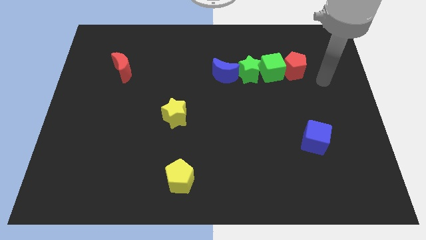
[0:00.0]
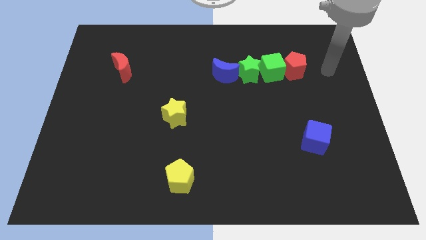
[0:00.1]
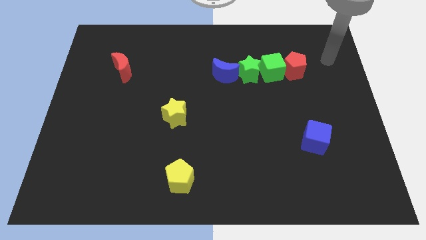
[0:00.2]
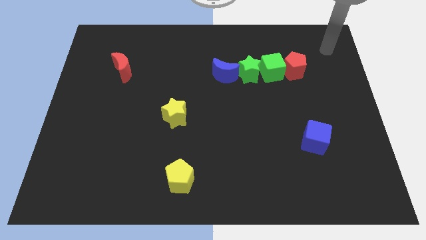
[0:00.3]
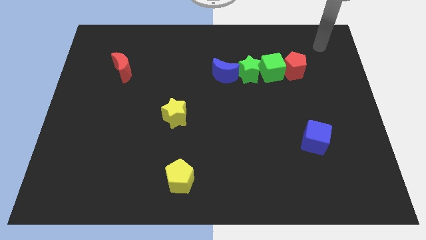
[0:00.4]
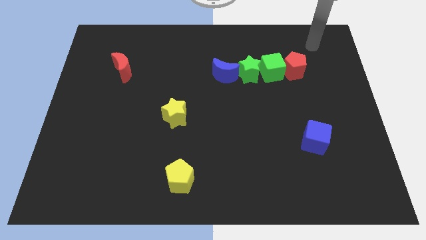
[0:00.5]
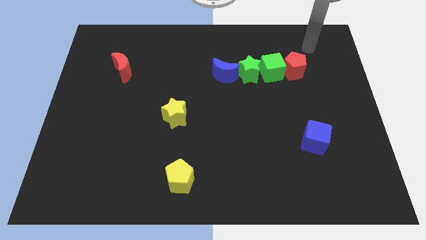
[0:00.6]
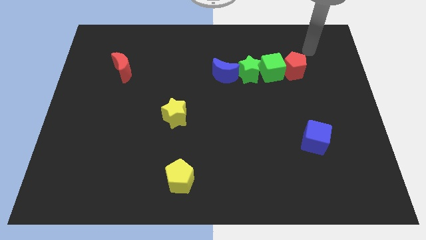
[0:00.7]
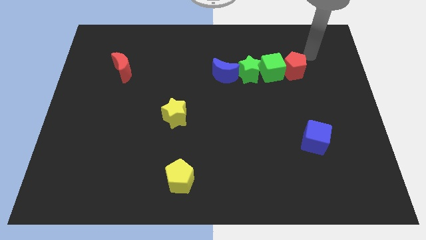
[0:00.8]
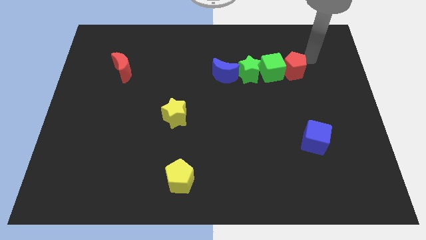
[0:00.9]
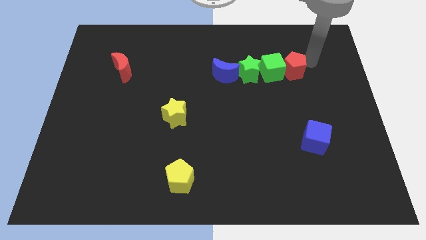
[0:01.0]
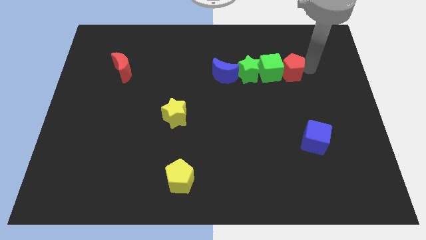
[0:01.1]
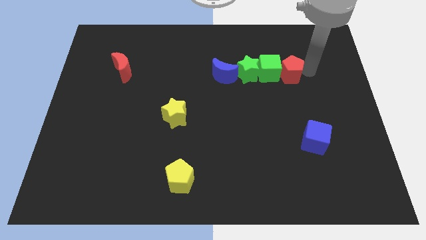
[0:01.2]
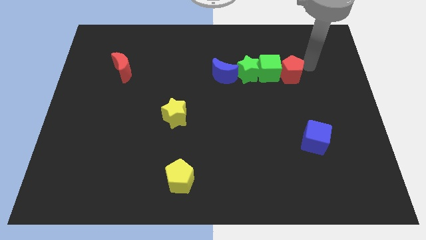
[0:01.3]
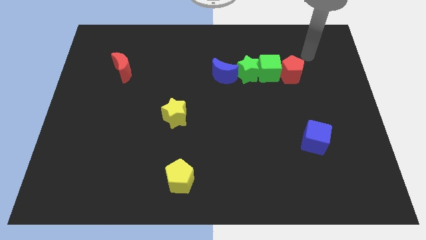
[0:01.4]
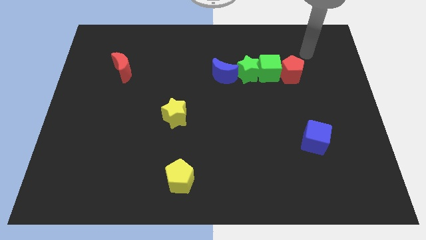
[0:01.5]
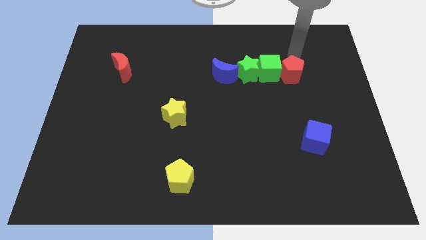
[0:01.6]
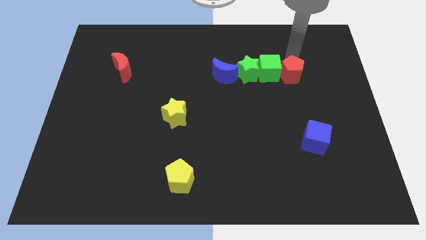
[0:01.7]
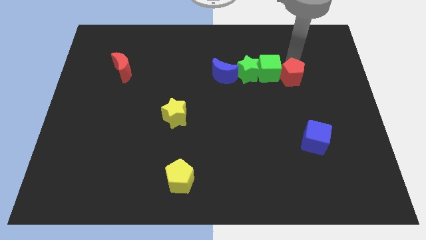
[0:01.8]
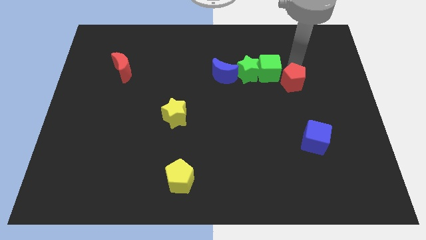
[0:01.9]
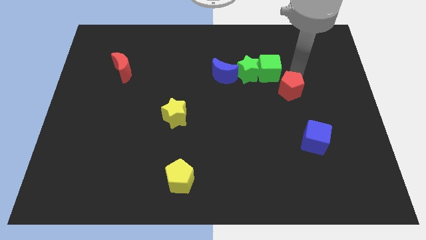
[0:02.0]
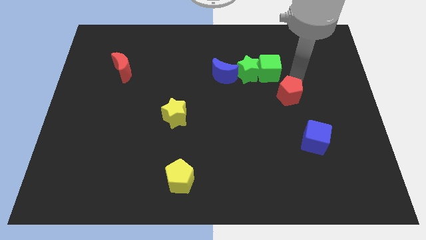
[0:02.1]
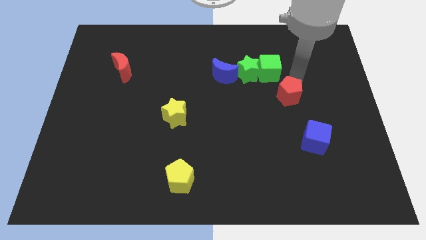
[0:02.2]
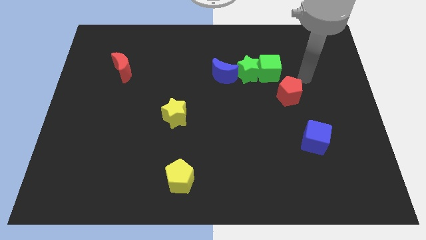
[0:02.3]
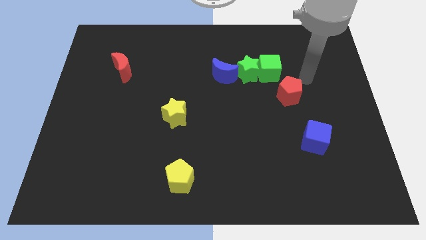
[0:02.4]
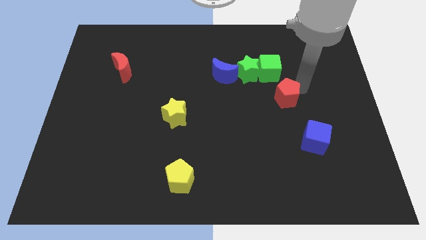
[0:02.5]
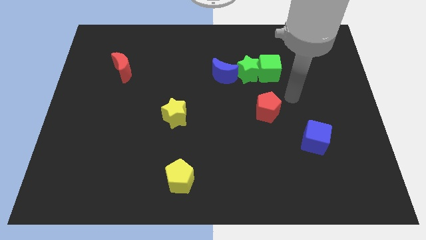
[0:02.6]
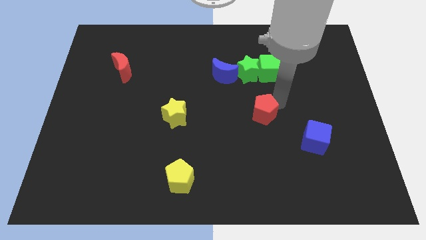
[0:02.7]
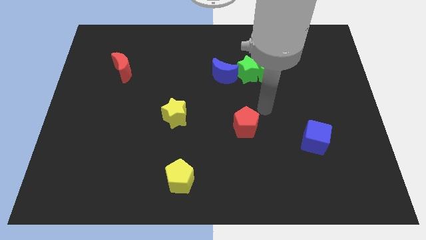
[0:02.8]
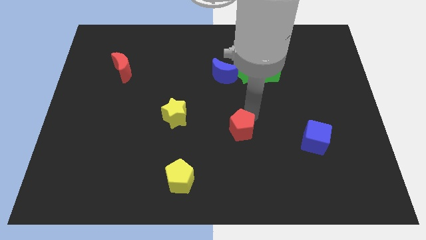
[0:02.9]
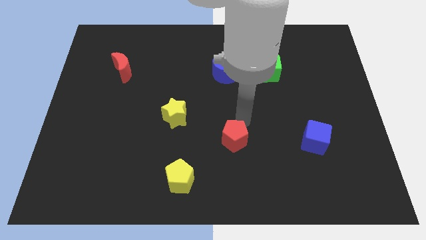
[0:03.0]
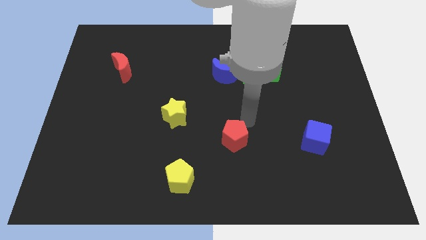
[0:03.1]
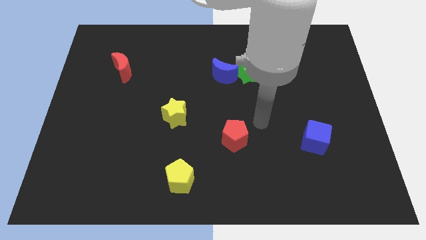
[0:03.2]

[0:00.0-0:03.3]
separate red pentagon from green blocks

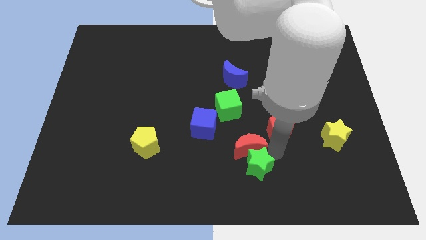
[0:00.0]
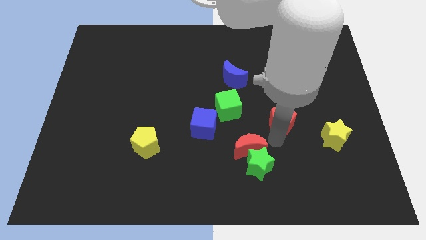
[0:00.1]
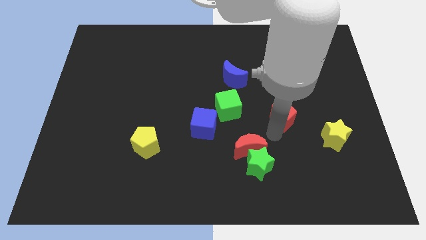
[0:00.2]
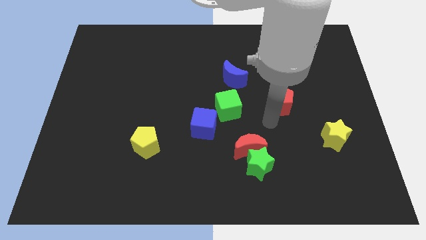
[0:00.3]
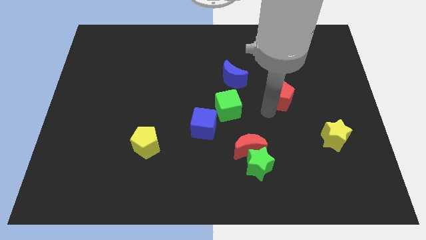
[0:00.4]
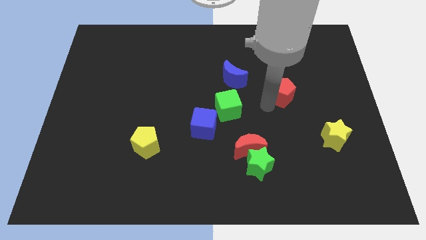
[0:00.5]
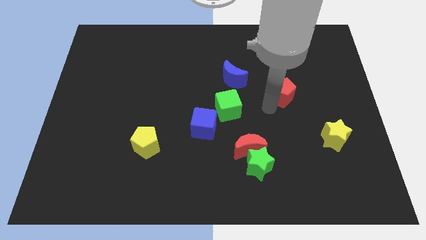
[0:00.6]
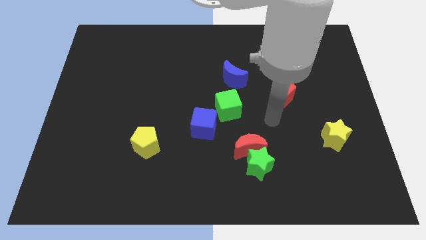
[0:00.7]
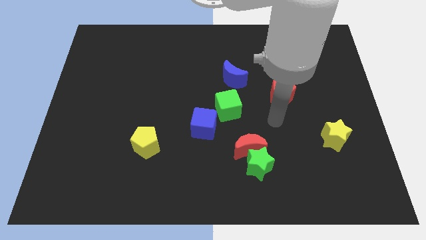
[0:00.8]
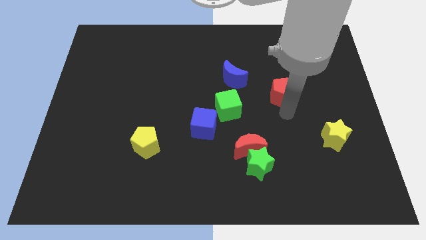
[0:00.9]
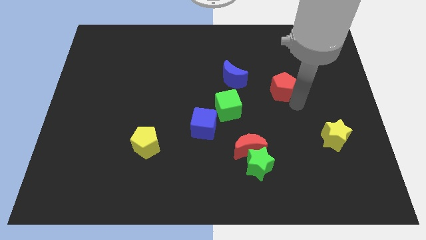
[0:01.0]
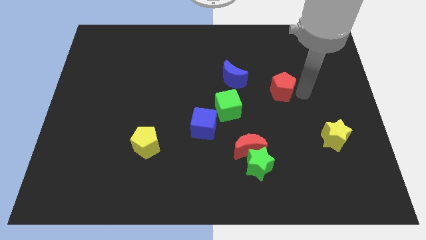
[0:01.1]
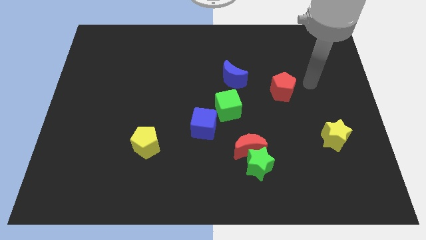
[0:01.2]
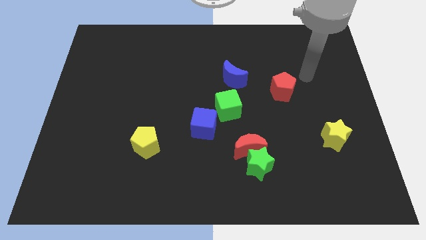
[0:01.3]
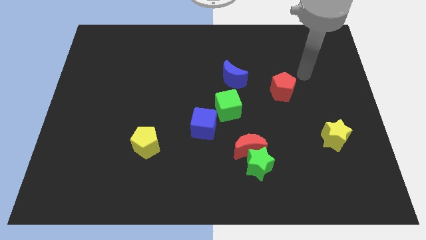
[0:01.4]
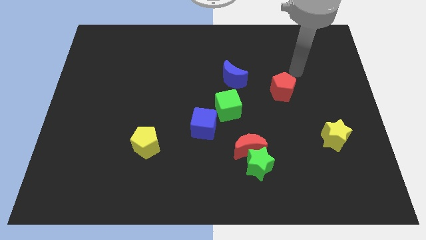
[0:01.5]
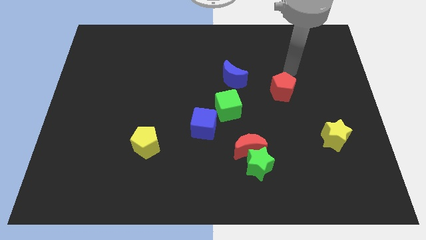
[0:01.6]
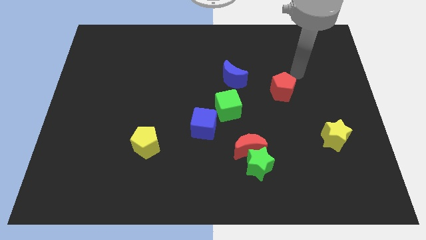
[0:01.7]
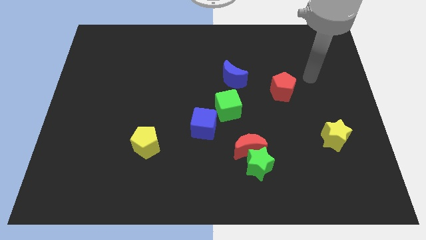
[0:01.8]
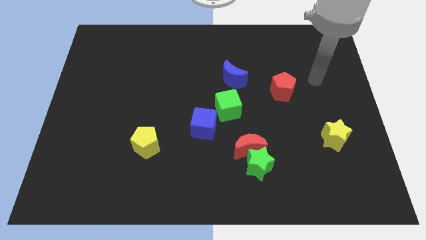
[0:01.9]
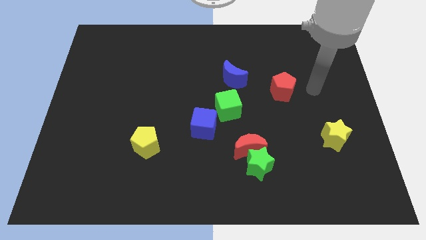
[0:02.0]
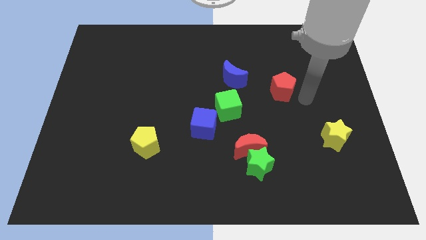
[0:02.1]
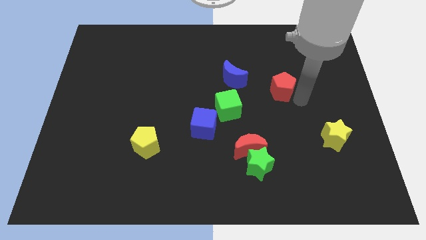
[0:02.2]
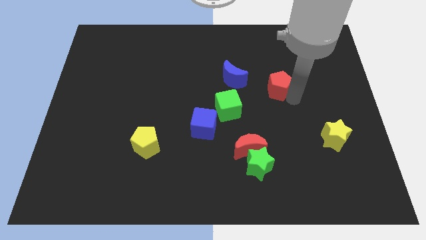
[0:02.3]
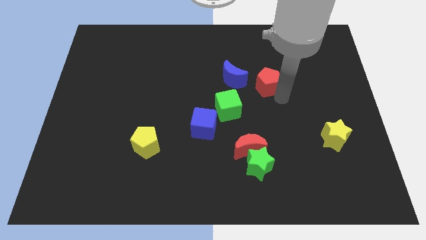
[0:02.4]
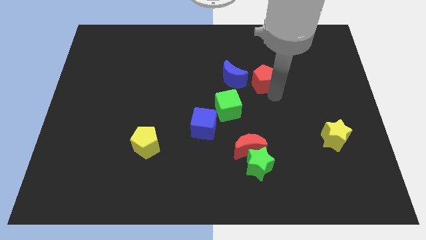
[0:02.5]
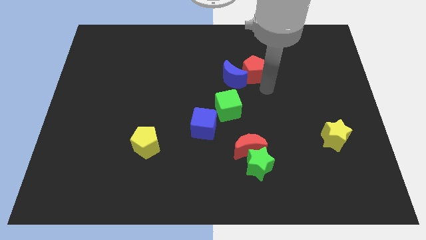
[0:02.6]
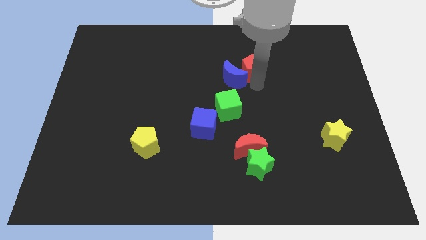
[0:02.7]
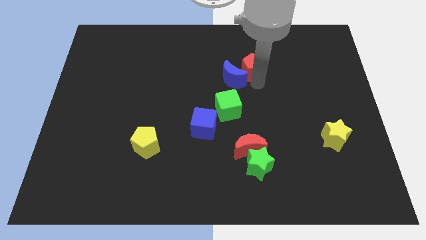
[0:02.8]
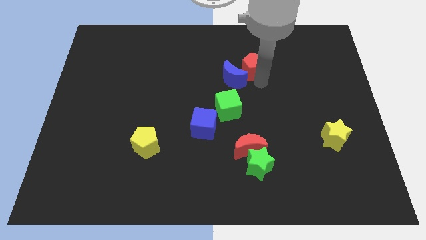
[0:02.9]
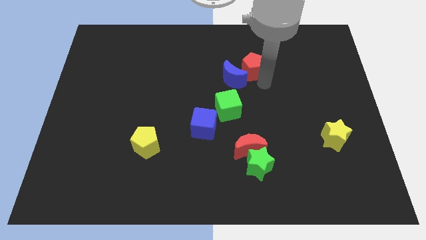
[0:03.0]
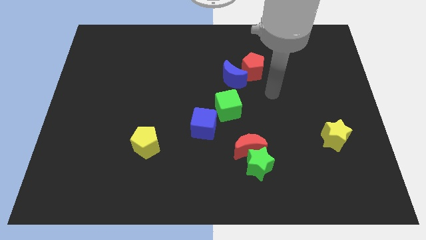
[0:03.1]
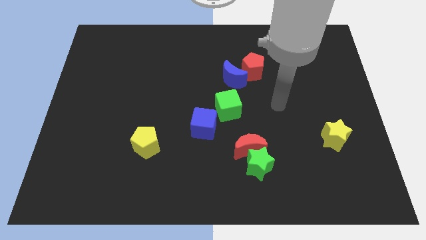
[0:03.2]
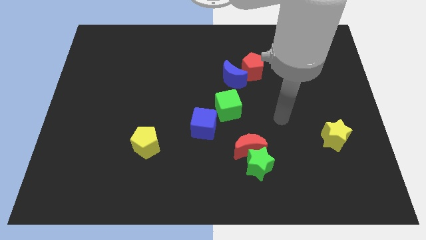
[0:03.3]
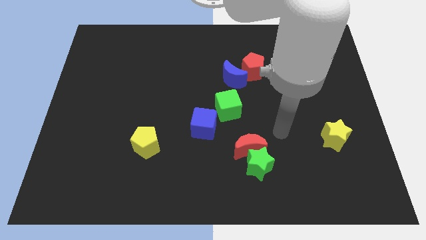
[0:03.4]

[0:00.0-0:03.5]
place the red pentagon at the top of the blue moon

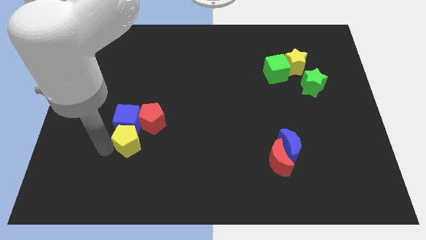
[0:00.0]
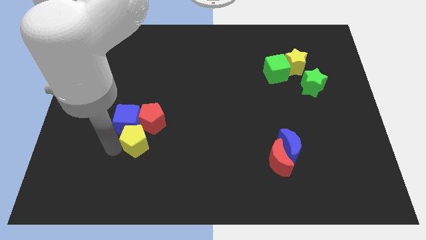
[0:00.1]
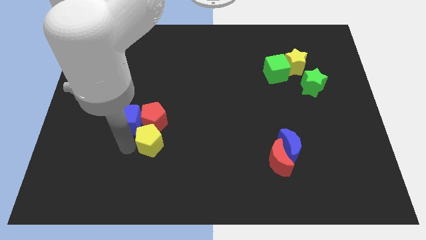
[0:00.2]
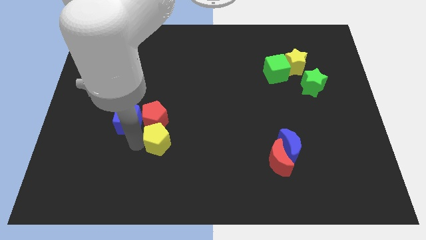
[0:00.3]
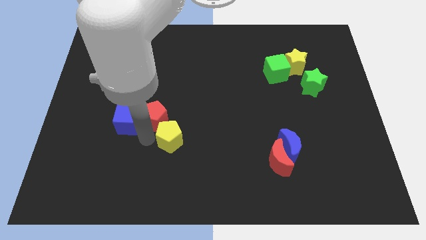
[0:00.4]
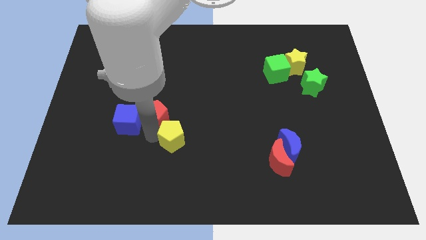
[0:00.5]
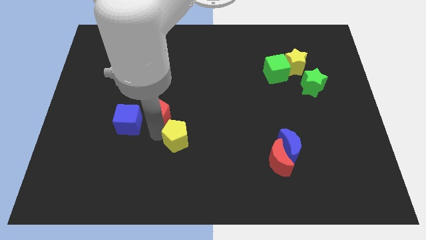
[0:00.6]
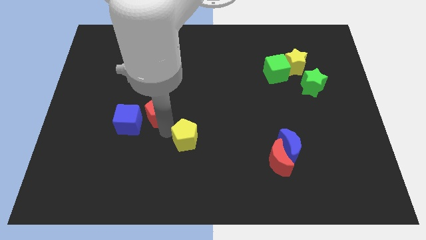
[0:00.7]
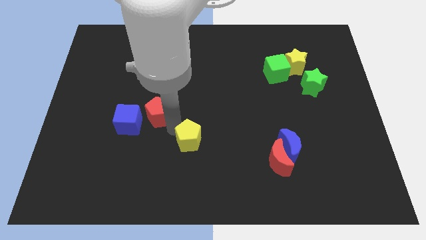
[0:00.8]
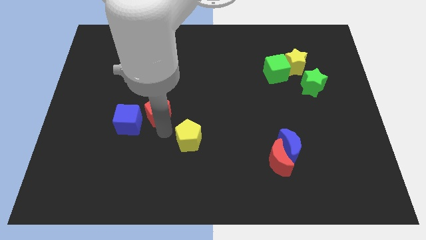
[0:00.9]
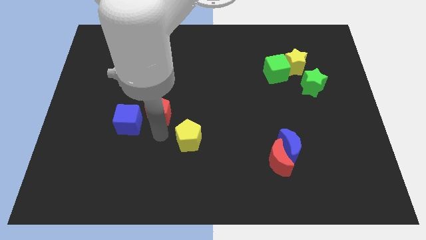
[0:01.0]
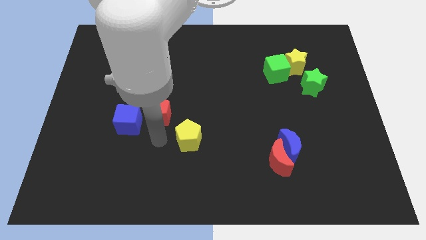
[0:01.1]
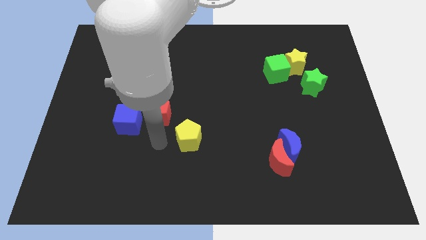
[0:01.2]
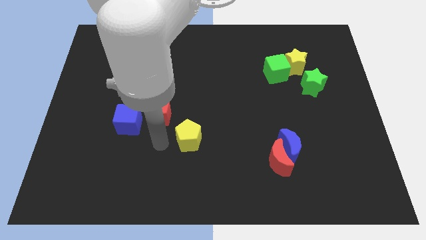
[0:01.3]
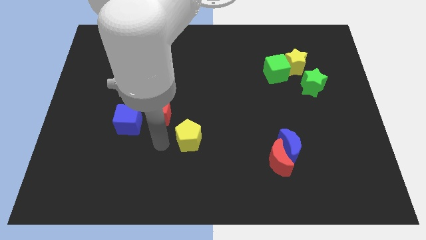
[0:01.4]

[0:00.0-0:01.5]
push the yellow pentagon away from the blue cube and red pentagon

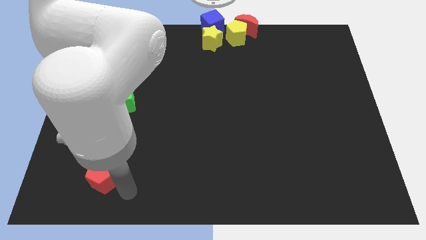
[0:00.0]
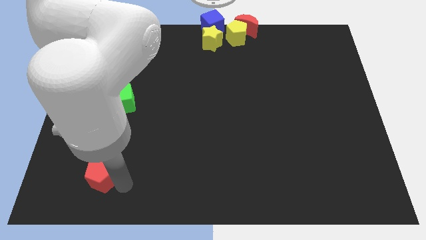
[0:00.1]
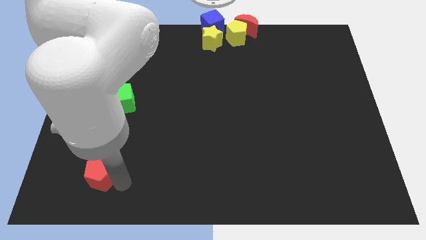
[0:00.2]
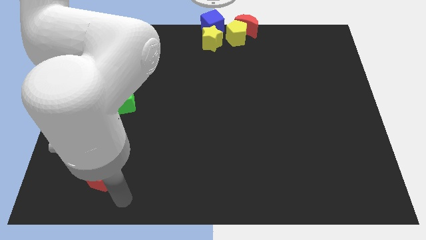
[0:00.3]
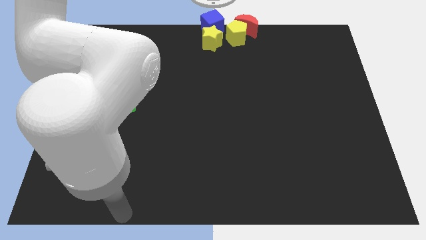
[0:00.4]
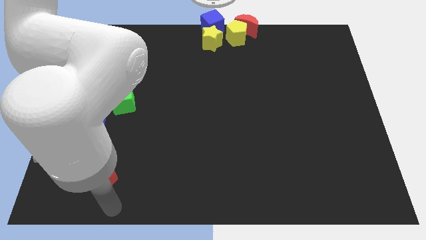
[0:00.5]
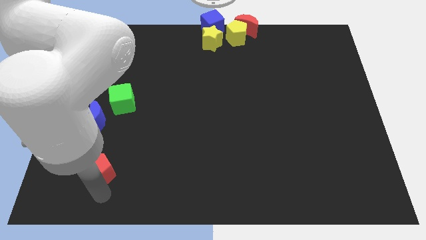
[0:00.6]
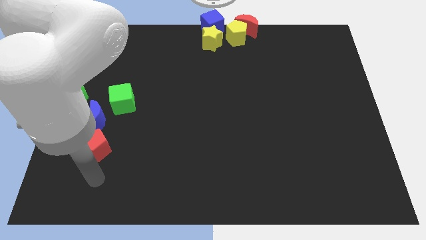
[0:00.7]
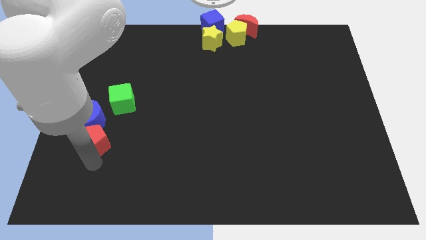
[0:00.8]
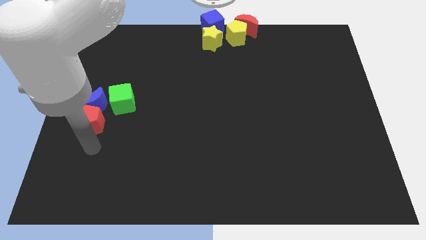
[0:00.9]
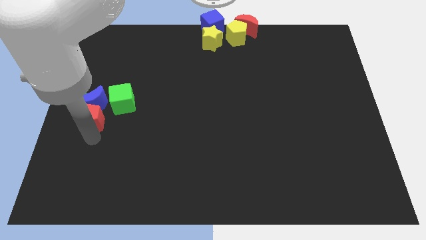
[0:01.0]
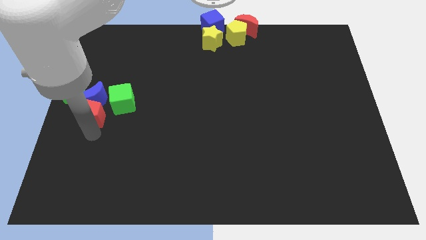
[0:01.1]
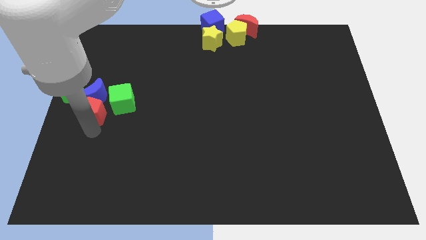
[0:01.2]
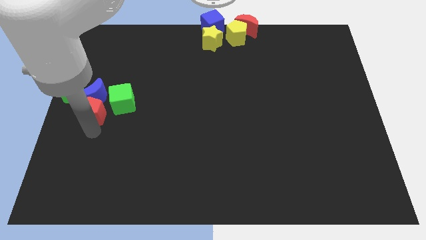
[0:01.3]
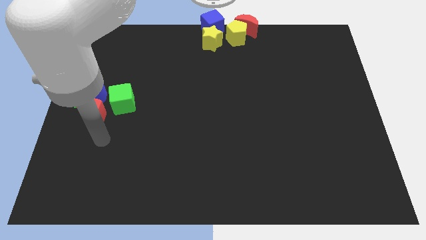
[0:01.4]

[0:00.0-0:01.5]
push the red pentagon into blue crescent
